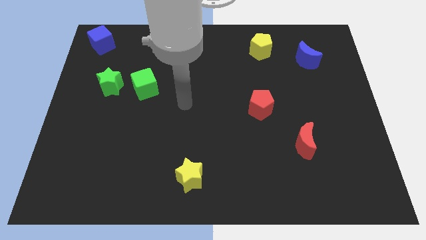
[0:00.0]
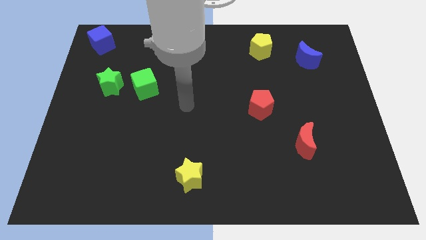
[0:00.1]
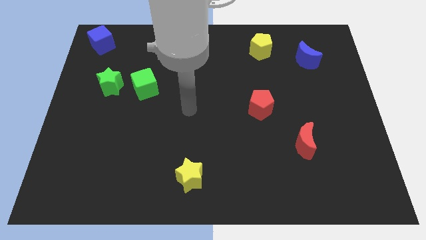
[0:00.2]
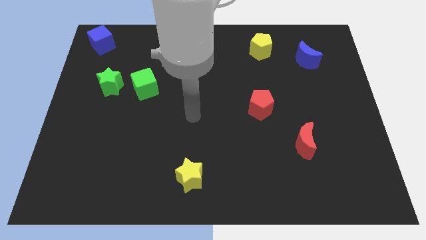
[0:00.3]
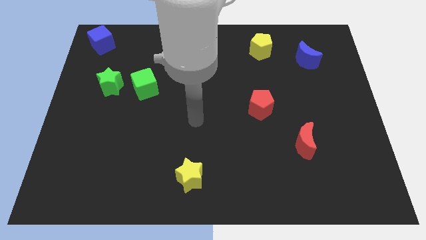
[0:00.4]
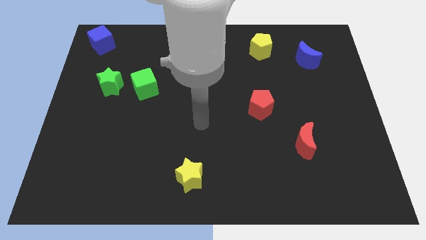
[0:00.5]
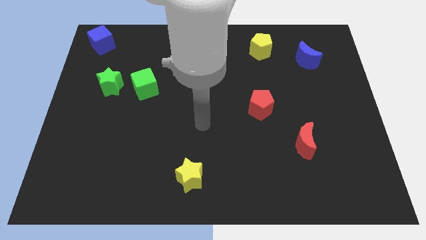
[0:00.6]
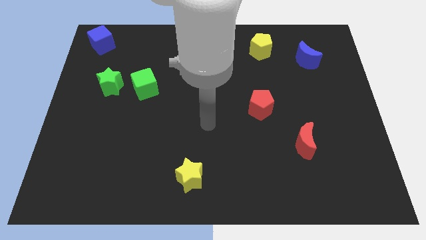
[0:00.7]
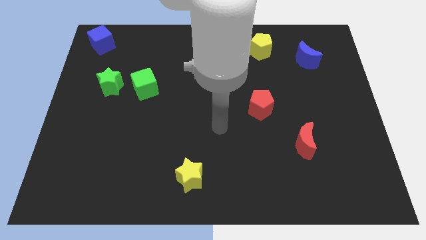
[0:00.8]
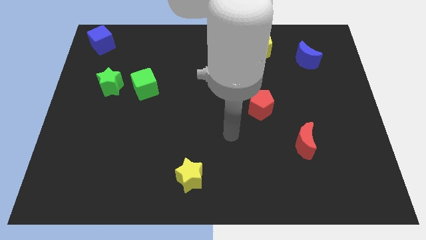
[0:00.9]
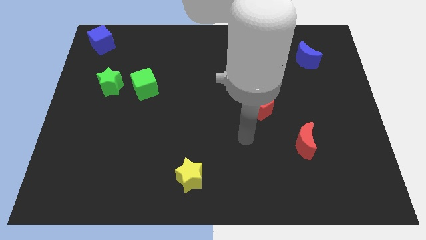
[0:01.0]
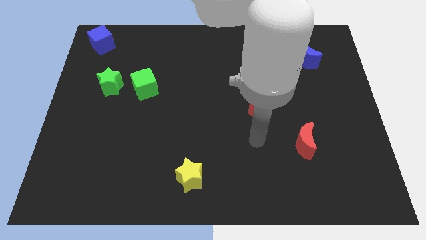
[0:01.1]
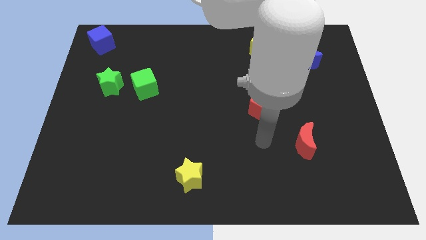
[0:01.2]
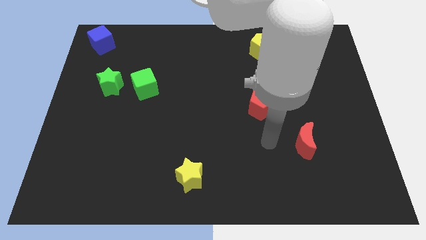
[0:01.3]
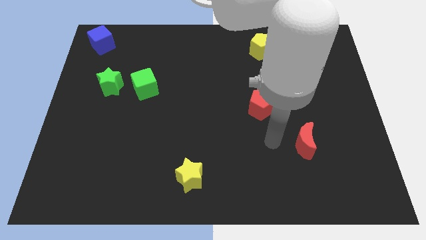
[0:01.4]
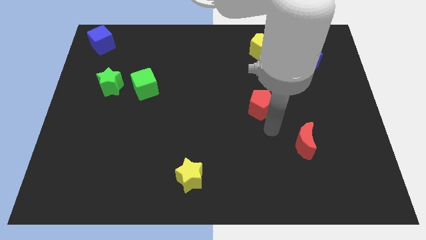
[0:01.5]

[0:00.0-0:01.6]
move your arm to the bottom of red pentagon

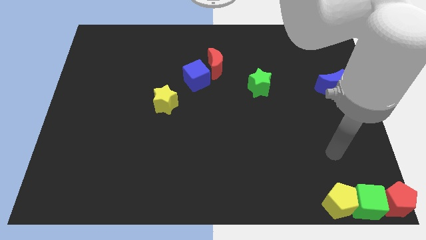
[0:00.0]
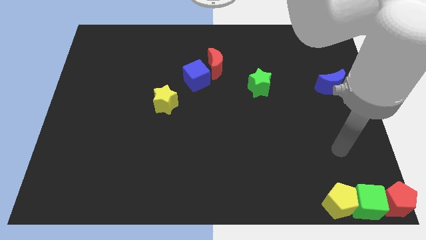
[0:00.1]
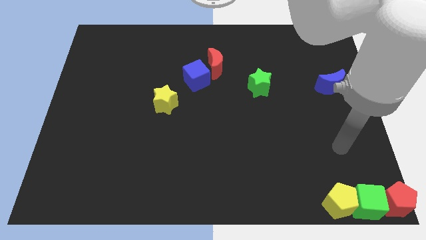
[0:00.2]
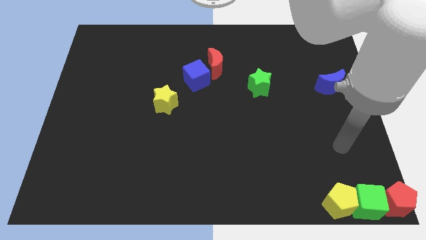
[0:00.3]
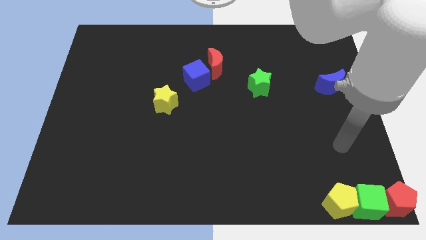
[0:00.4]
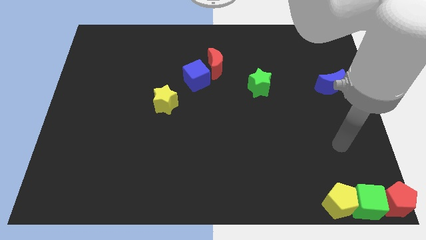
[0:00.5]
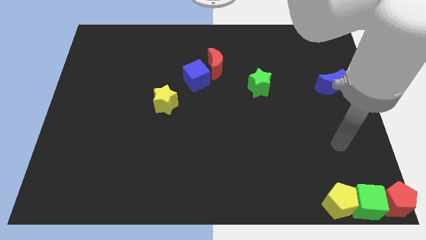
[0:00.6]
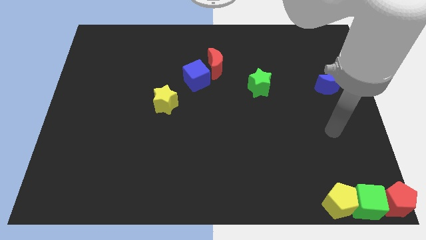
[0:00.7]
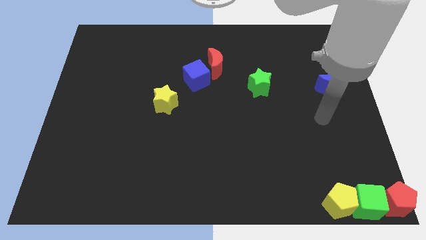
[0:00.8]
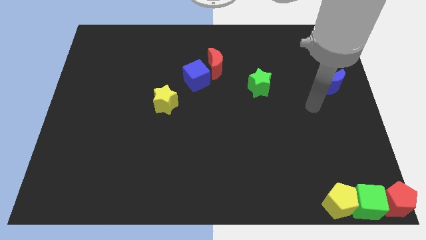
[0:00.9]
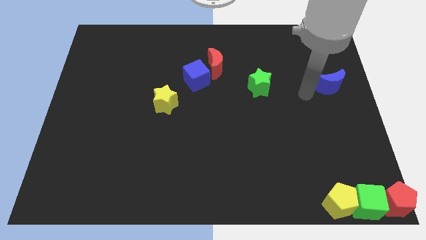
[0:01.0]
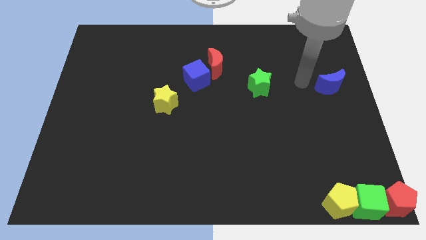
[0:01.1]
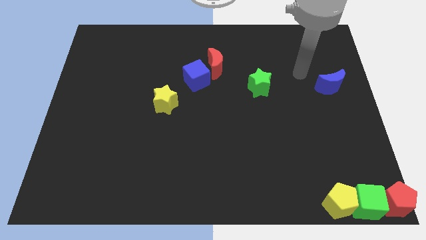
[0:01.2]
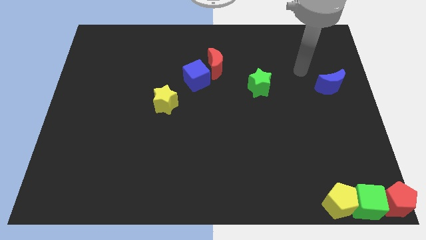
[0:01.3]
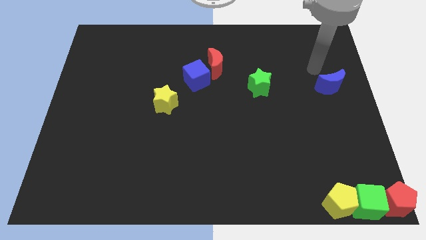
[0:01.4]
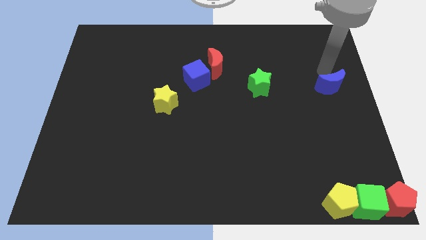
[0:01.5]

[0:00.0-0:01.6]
point your arm at the top of the blue crescent

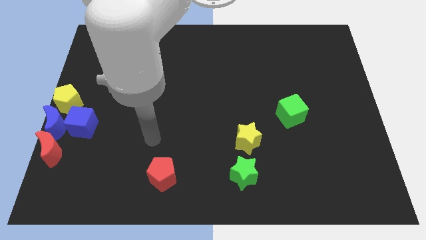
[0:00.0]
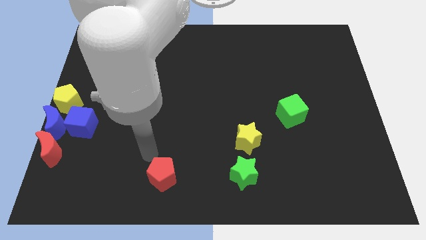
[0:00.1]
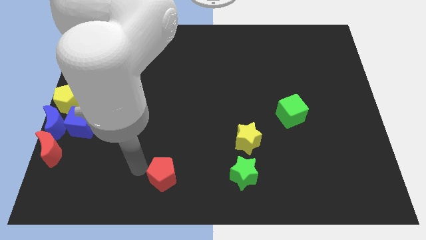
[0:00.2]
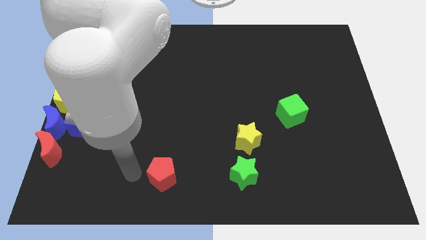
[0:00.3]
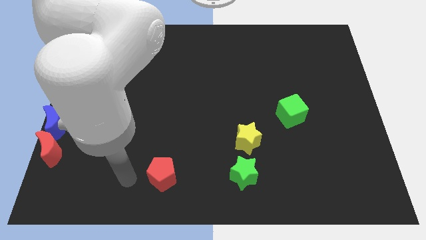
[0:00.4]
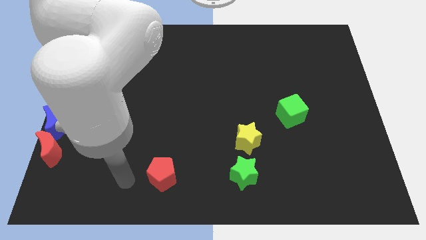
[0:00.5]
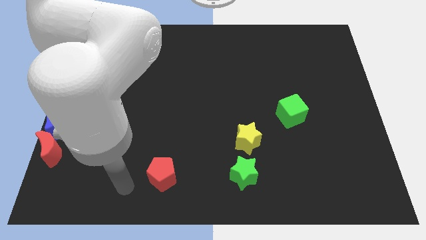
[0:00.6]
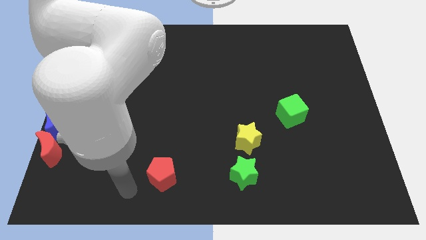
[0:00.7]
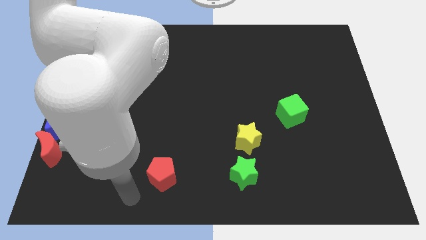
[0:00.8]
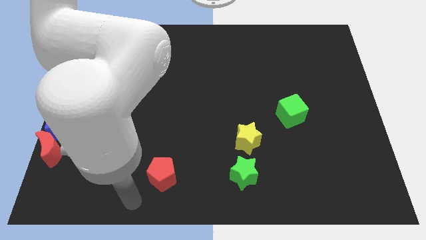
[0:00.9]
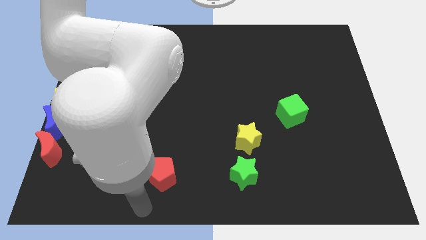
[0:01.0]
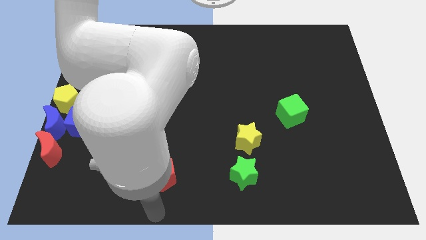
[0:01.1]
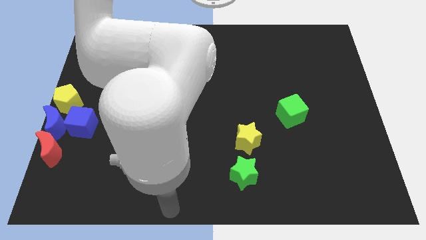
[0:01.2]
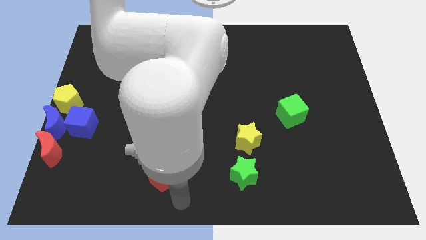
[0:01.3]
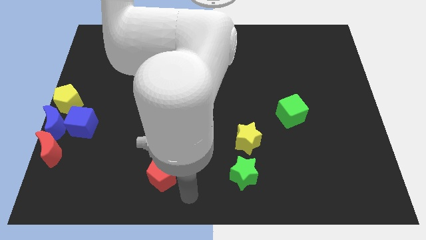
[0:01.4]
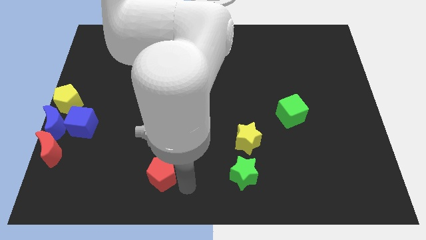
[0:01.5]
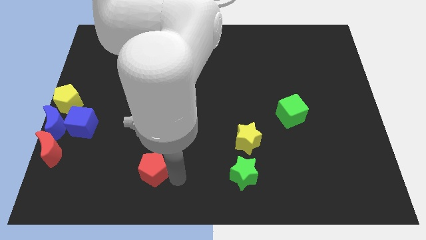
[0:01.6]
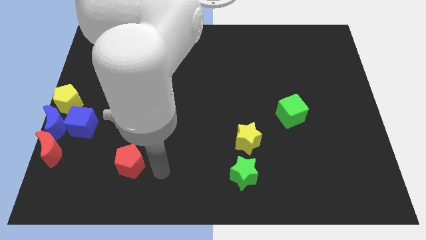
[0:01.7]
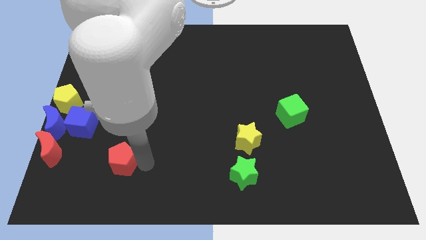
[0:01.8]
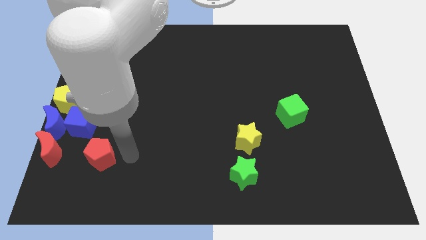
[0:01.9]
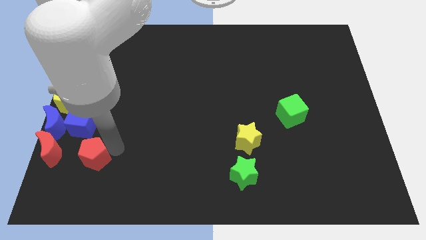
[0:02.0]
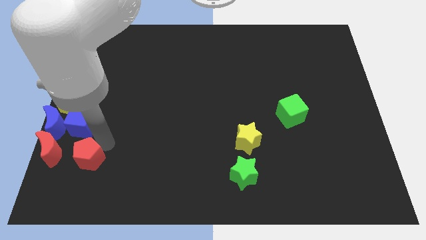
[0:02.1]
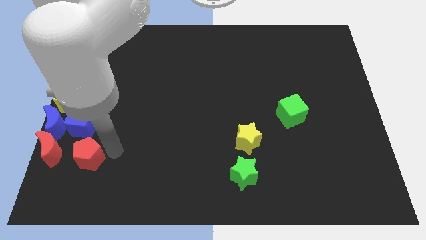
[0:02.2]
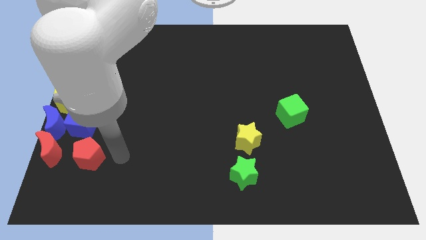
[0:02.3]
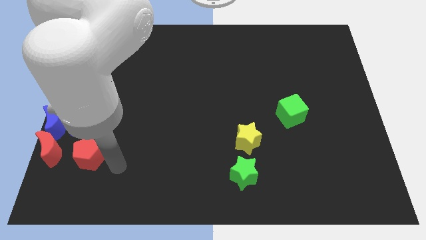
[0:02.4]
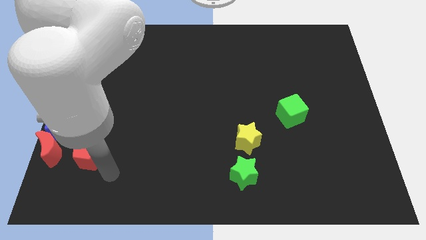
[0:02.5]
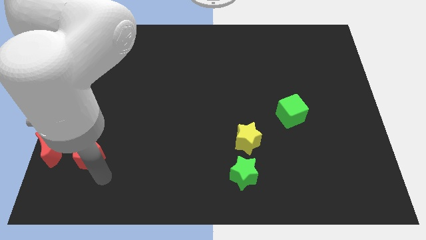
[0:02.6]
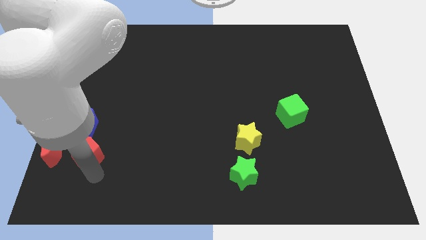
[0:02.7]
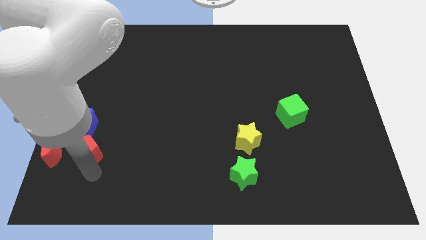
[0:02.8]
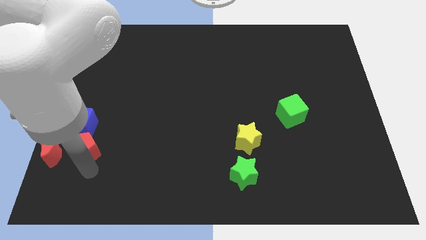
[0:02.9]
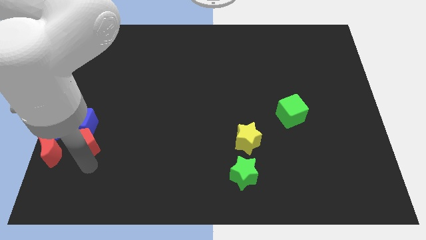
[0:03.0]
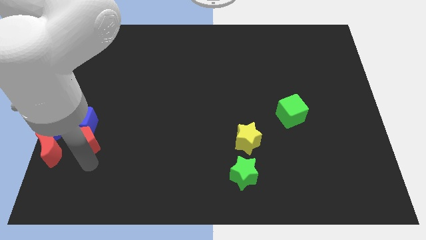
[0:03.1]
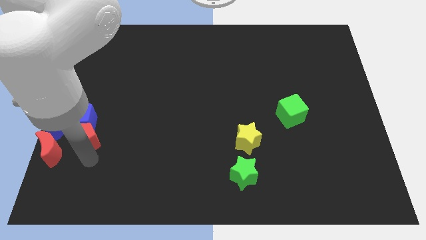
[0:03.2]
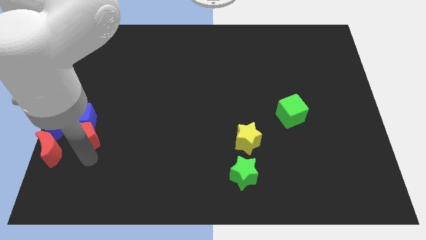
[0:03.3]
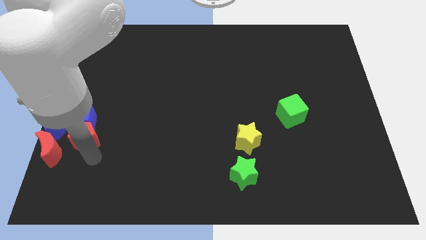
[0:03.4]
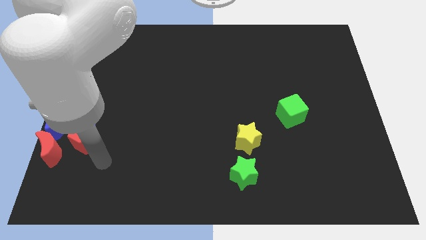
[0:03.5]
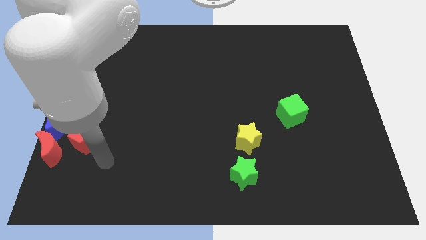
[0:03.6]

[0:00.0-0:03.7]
push the red pentagon into the bottom of the blue cube

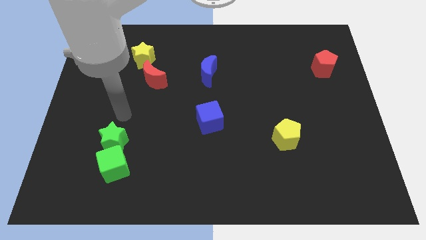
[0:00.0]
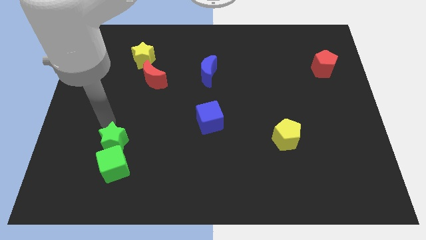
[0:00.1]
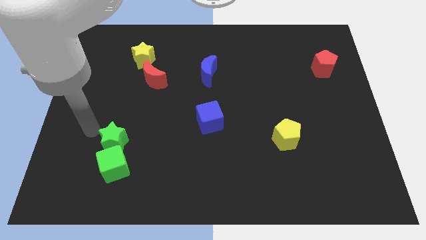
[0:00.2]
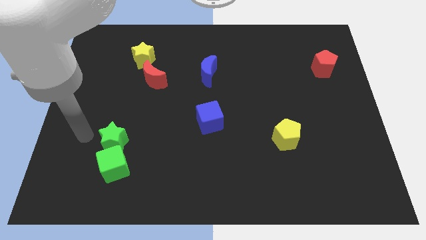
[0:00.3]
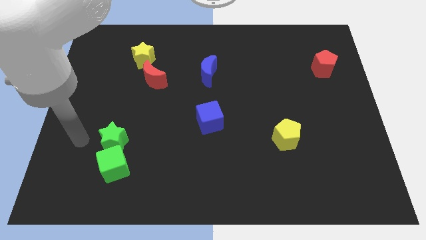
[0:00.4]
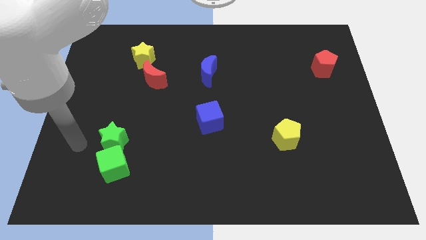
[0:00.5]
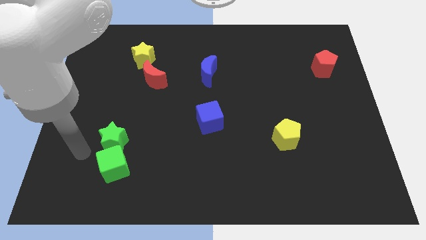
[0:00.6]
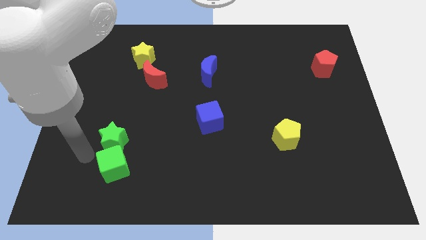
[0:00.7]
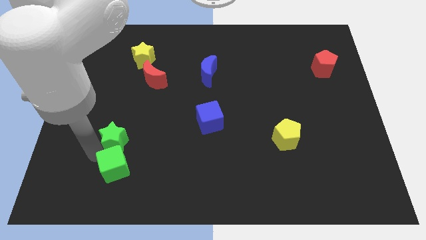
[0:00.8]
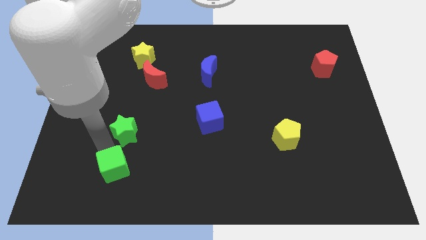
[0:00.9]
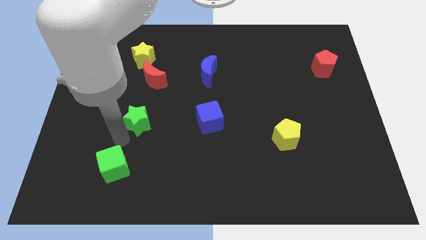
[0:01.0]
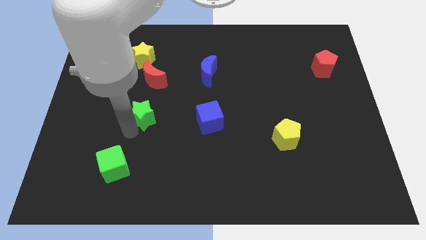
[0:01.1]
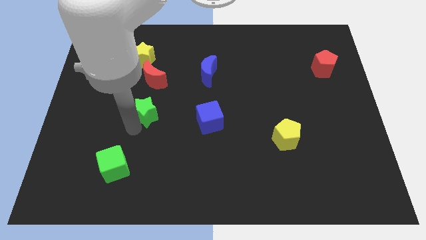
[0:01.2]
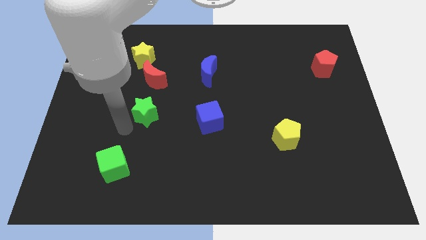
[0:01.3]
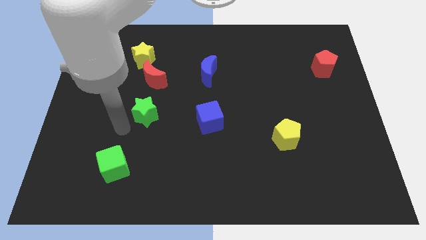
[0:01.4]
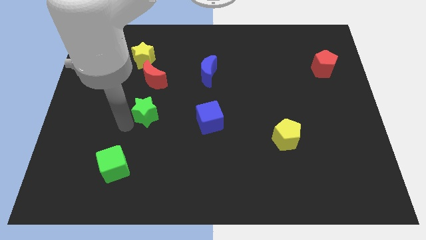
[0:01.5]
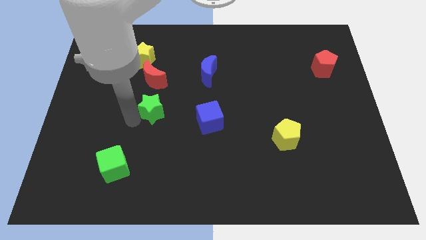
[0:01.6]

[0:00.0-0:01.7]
separate the green star from the green cube

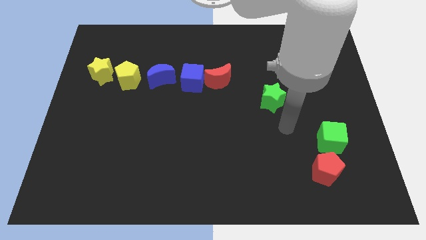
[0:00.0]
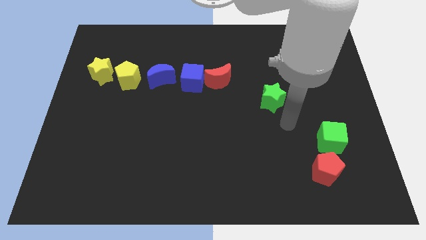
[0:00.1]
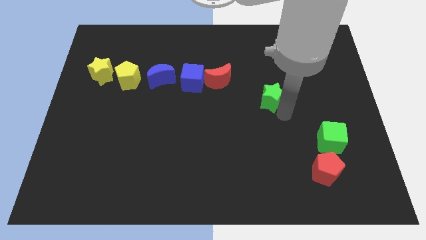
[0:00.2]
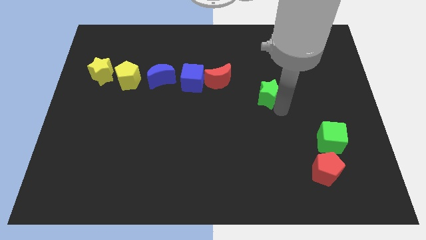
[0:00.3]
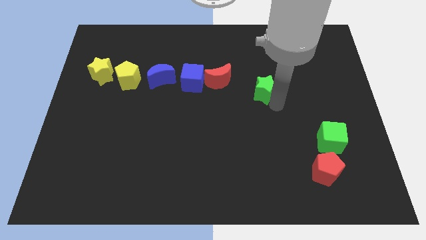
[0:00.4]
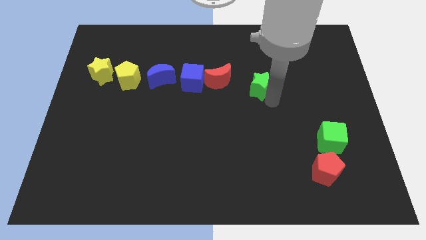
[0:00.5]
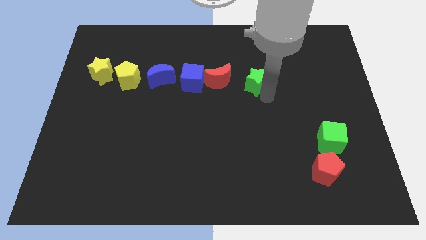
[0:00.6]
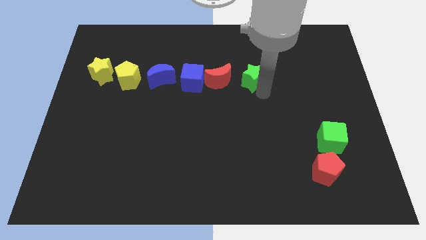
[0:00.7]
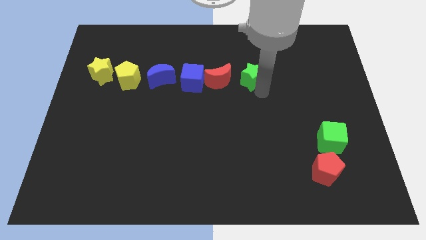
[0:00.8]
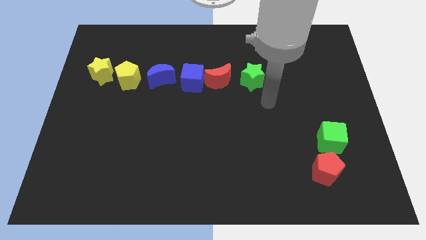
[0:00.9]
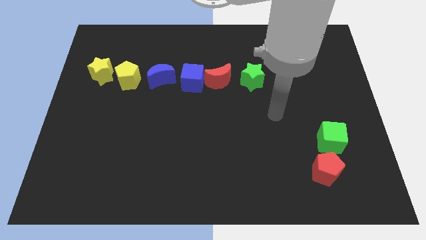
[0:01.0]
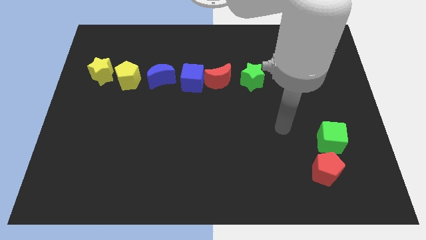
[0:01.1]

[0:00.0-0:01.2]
drag the green star right of the red moon
